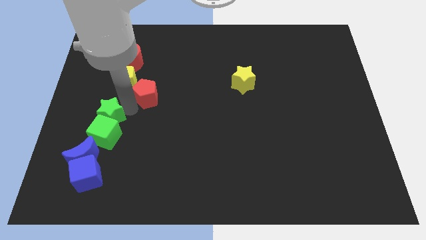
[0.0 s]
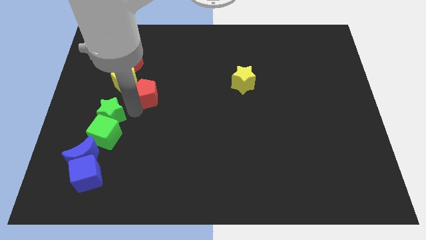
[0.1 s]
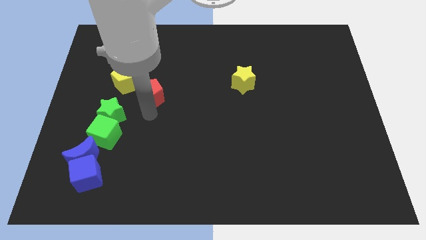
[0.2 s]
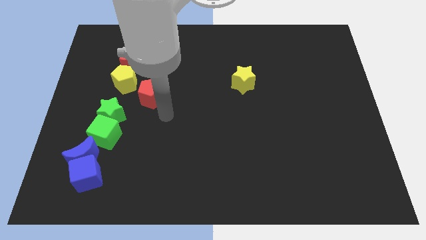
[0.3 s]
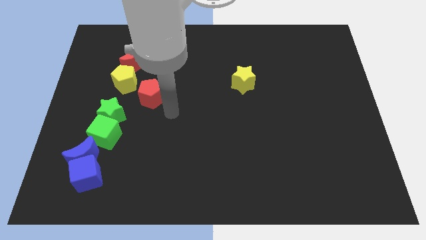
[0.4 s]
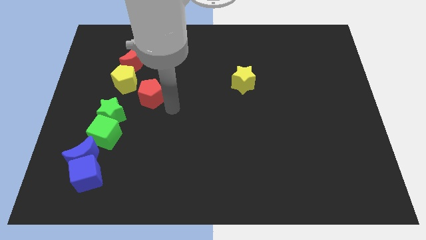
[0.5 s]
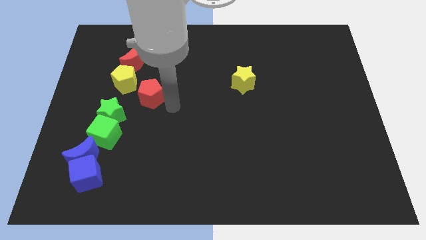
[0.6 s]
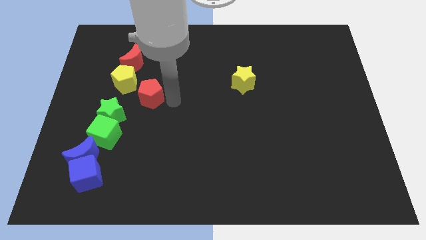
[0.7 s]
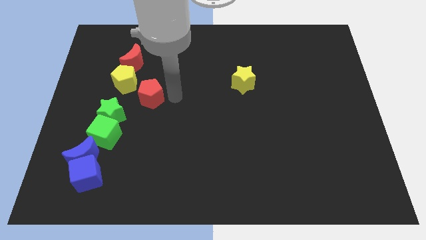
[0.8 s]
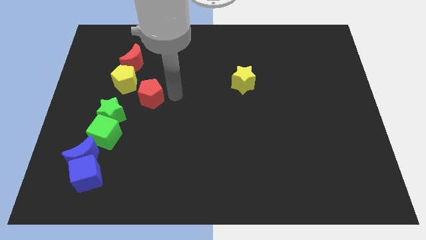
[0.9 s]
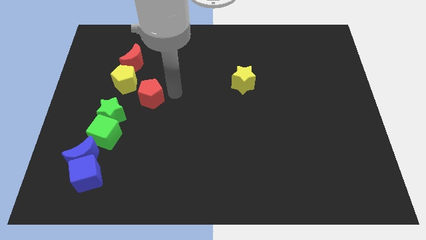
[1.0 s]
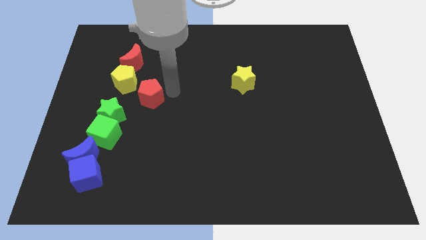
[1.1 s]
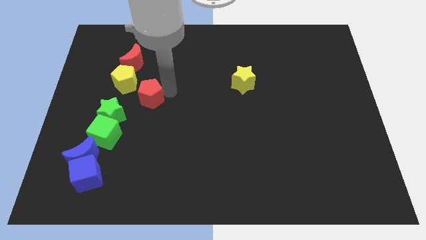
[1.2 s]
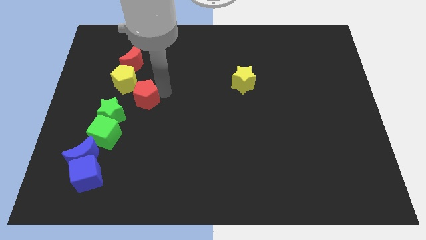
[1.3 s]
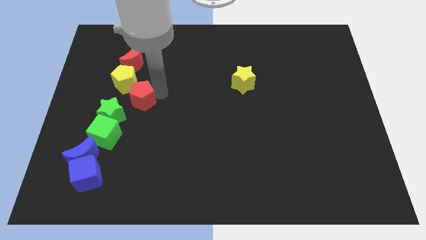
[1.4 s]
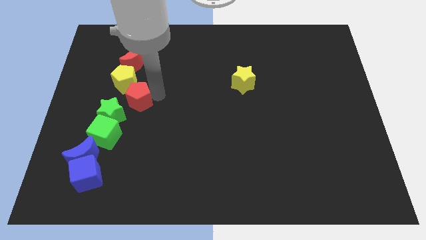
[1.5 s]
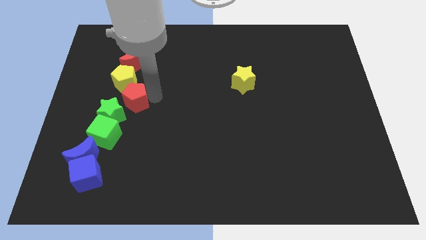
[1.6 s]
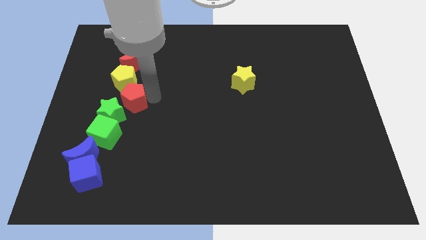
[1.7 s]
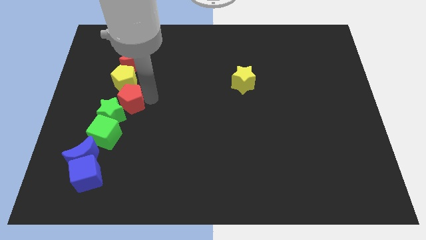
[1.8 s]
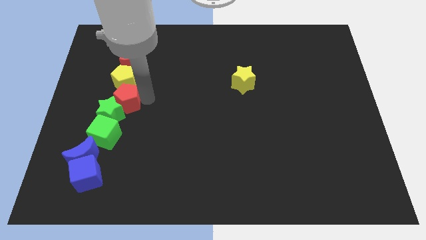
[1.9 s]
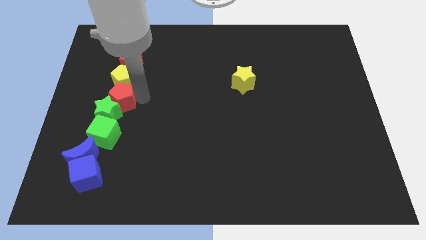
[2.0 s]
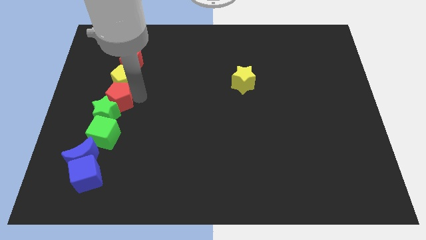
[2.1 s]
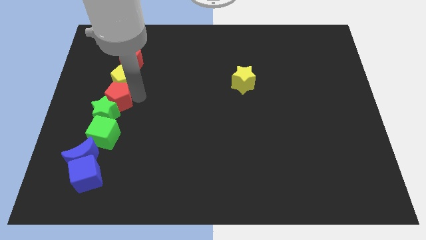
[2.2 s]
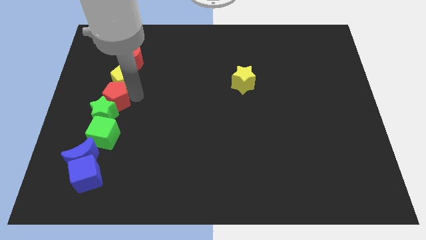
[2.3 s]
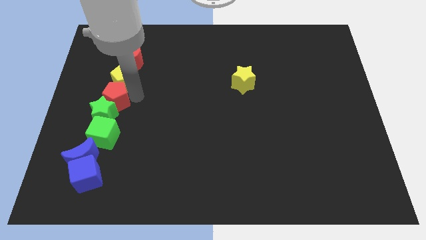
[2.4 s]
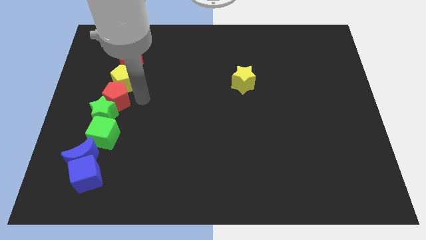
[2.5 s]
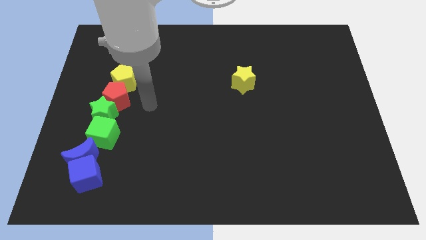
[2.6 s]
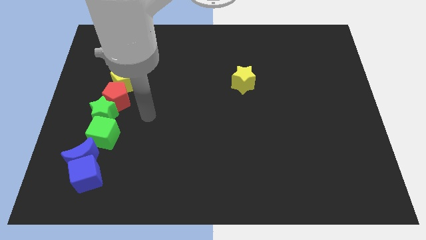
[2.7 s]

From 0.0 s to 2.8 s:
put the red pentagon between the yellow pentagon and green star

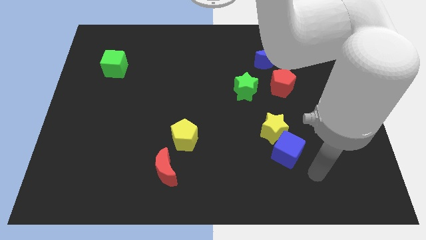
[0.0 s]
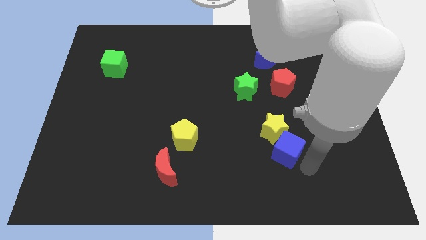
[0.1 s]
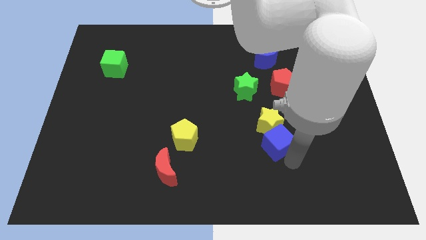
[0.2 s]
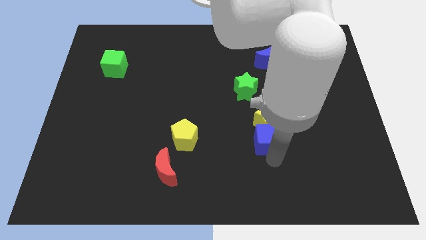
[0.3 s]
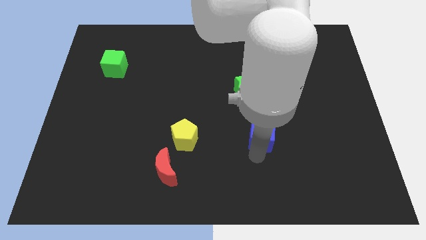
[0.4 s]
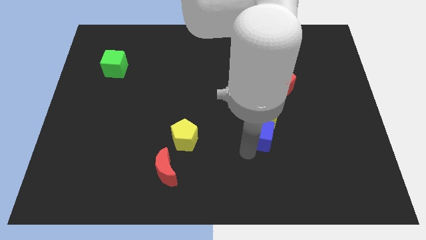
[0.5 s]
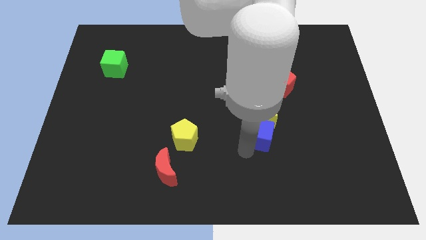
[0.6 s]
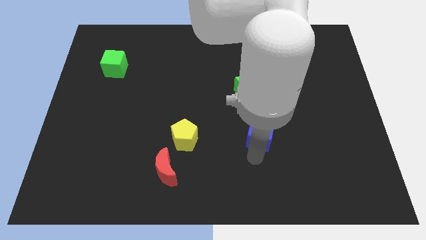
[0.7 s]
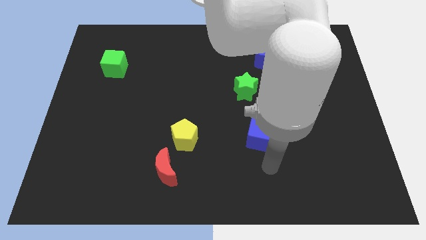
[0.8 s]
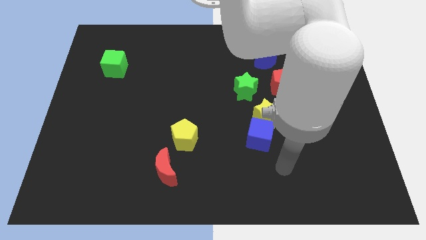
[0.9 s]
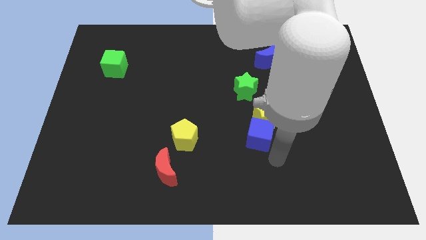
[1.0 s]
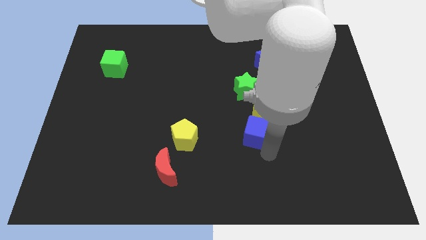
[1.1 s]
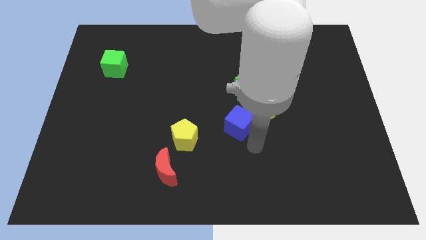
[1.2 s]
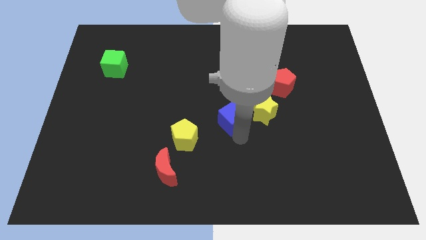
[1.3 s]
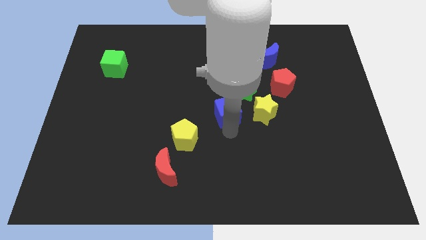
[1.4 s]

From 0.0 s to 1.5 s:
place the blue cube in between the yellow star and the yellow pentagon

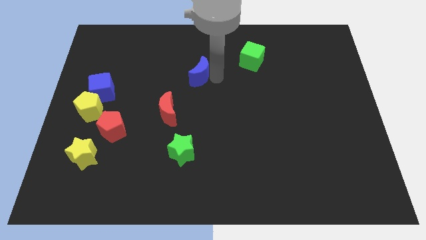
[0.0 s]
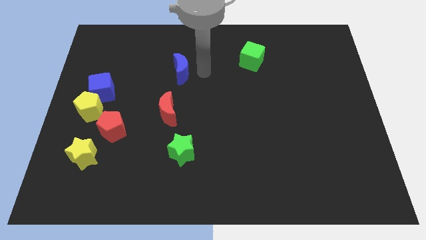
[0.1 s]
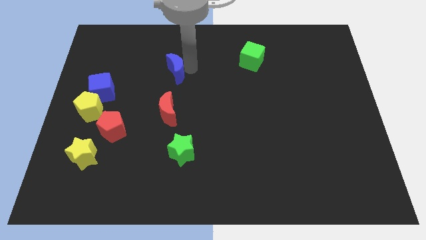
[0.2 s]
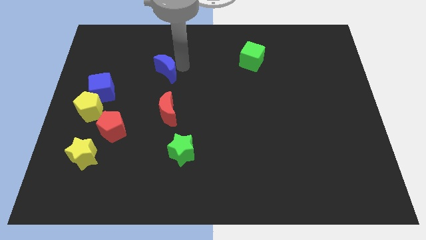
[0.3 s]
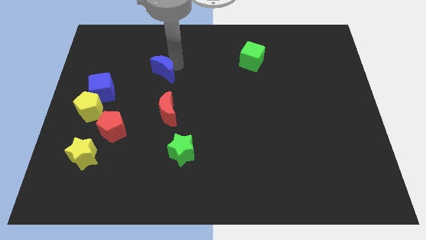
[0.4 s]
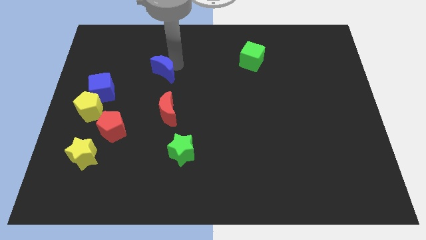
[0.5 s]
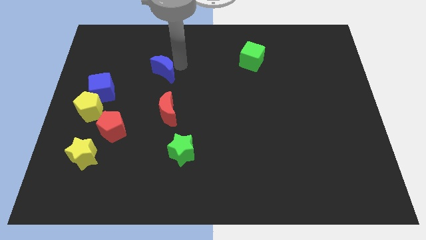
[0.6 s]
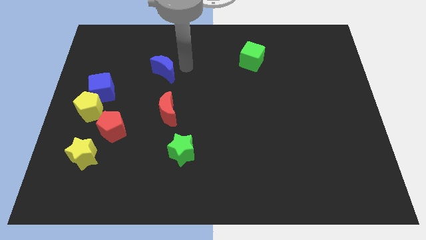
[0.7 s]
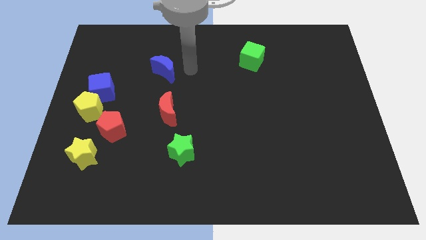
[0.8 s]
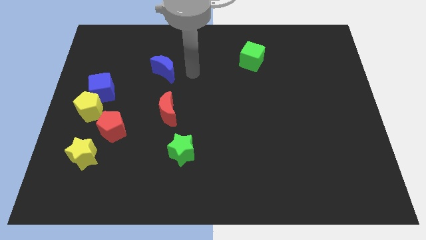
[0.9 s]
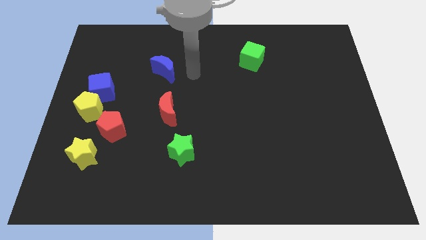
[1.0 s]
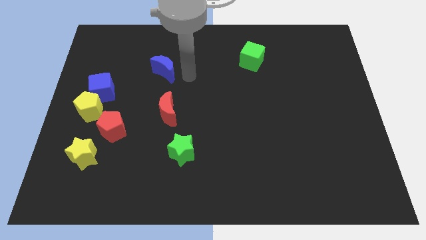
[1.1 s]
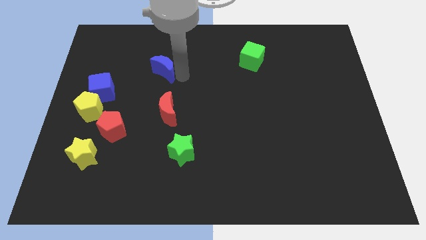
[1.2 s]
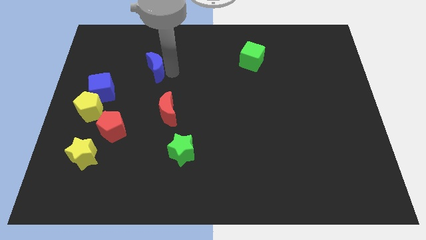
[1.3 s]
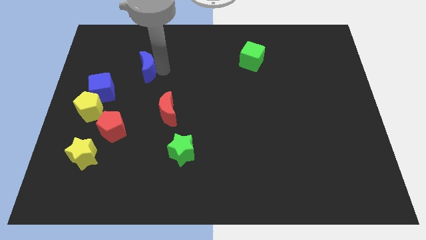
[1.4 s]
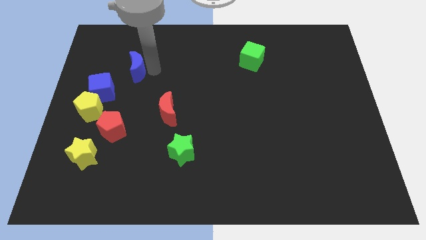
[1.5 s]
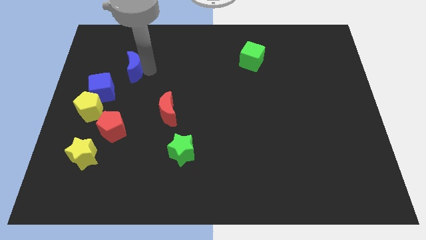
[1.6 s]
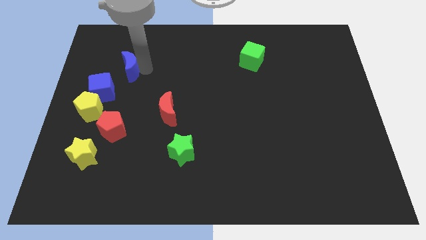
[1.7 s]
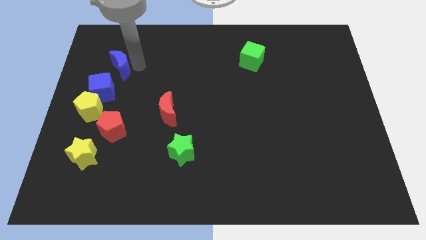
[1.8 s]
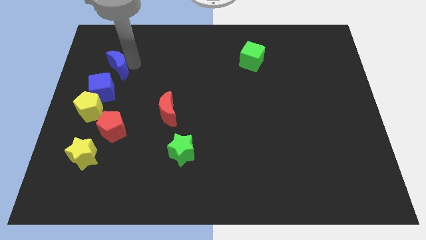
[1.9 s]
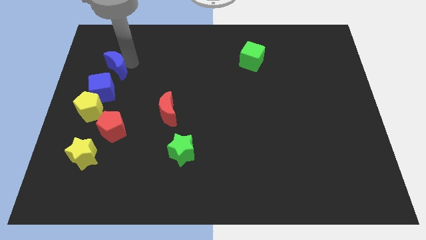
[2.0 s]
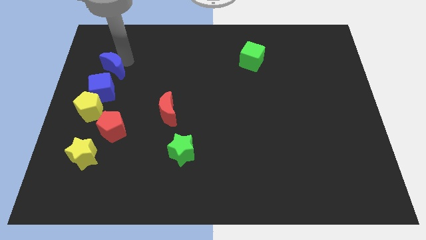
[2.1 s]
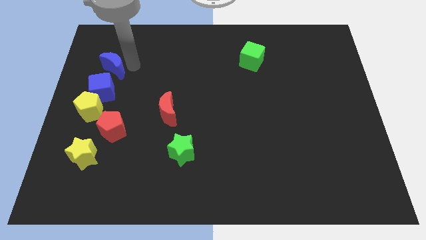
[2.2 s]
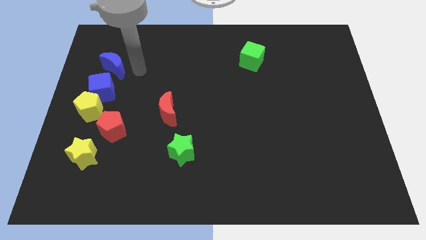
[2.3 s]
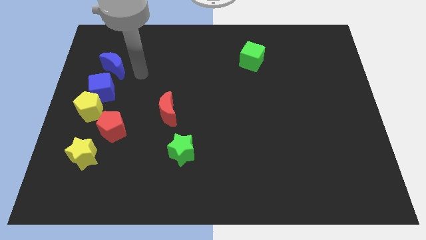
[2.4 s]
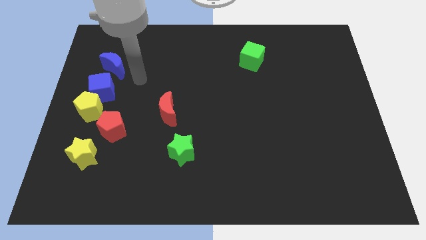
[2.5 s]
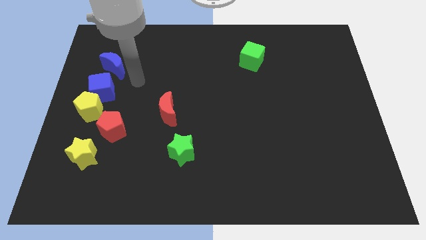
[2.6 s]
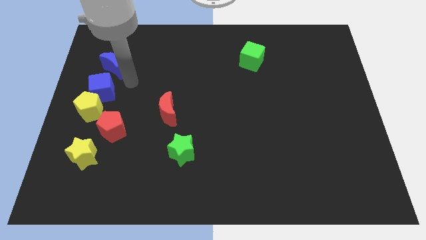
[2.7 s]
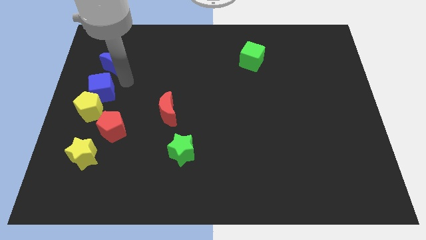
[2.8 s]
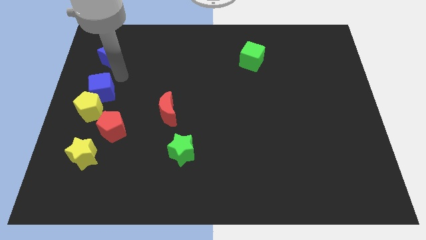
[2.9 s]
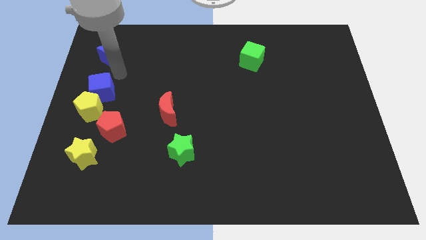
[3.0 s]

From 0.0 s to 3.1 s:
place the blue moon above the blue cube

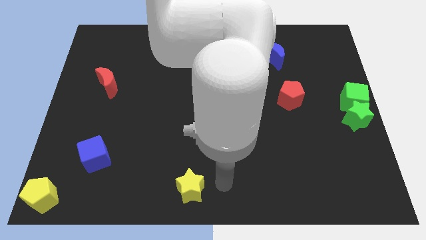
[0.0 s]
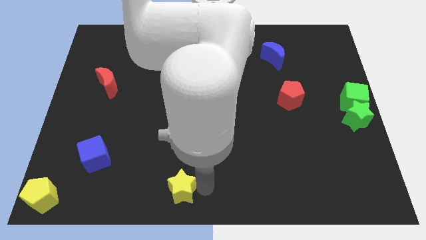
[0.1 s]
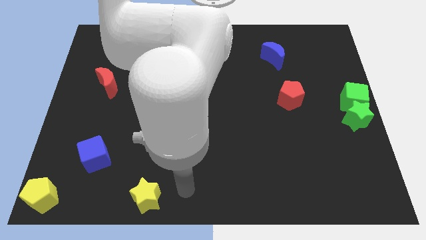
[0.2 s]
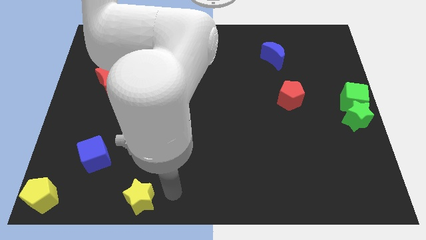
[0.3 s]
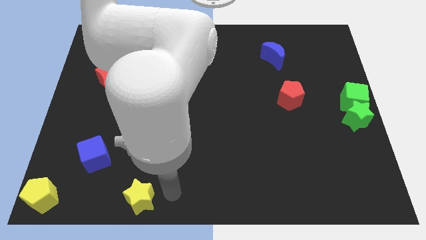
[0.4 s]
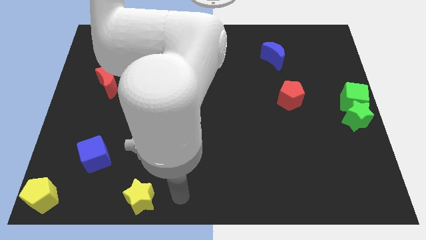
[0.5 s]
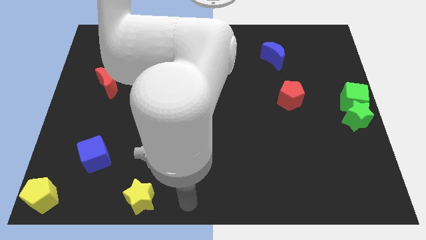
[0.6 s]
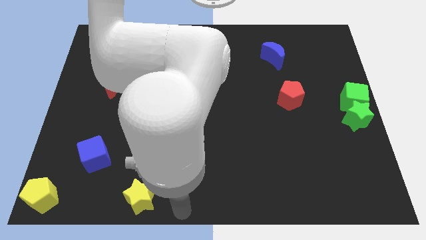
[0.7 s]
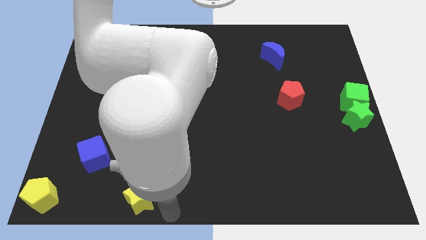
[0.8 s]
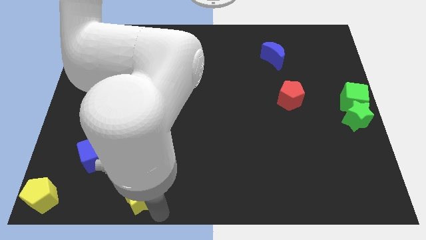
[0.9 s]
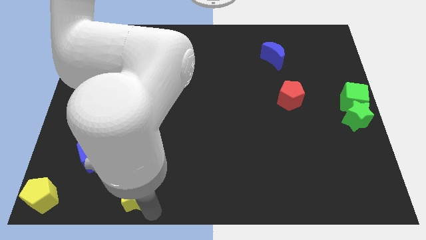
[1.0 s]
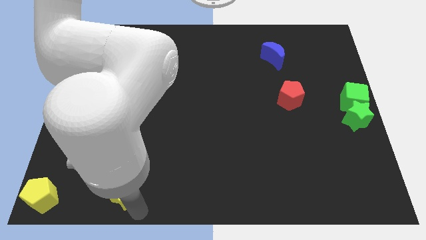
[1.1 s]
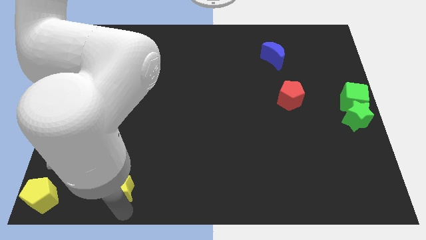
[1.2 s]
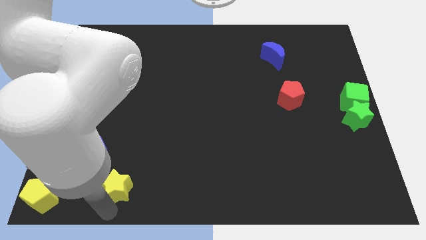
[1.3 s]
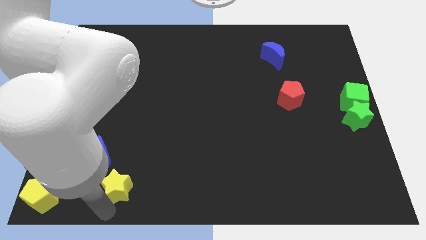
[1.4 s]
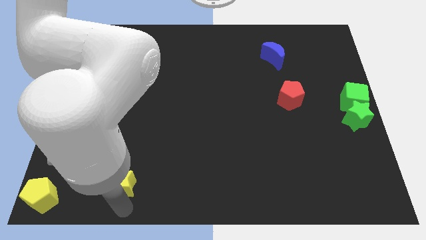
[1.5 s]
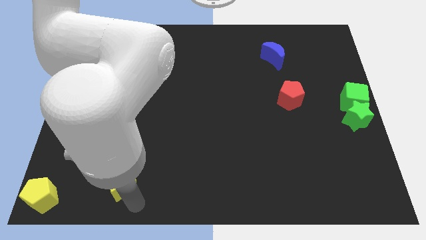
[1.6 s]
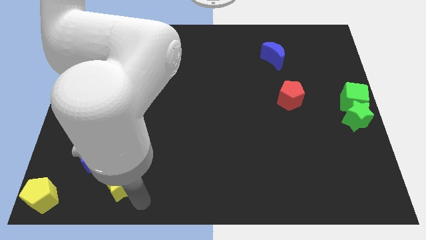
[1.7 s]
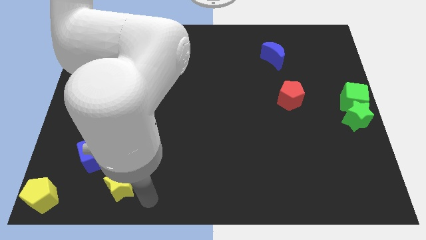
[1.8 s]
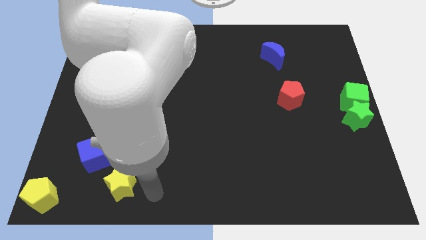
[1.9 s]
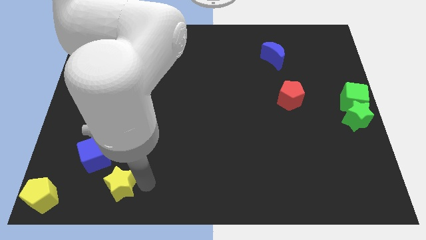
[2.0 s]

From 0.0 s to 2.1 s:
push the yellow star closer to the yellow pentagon
